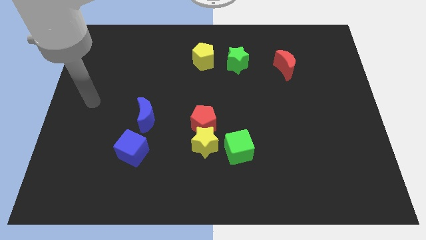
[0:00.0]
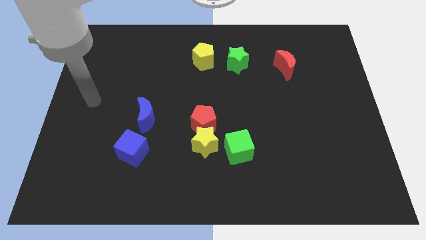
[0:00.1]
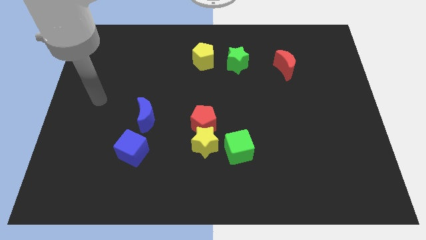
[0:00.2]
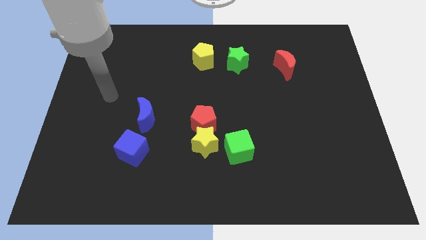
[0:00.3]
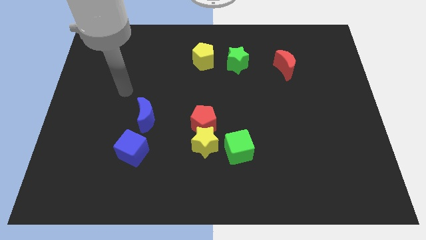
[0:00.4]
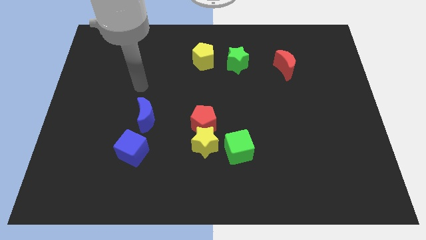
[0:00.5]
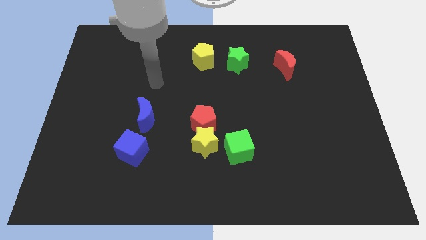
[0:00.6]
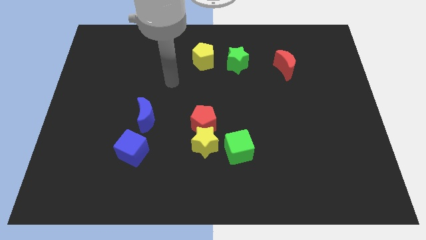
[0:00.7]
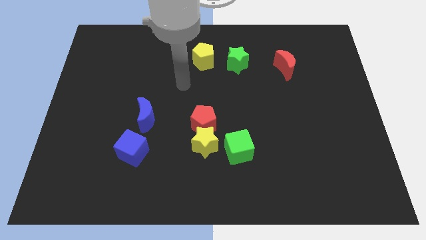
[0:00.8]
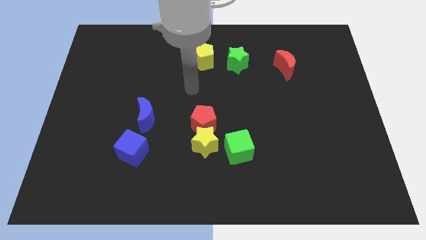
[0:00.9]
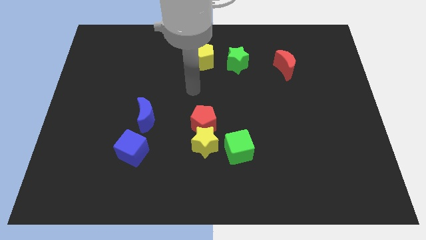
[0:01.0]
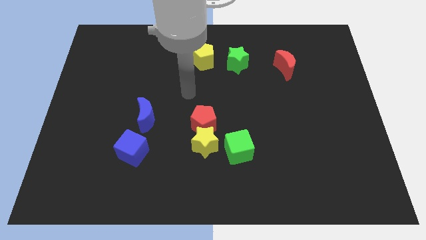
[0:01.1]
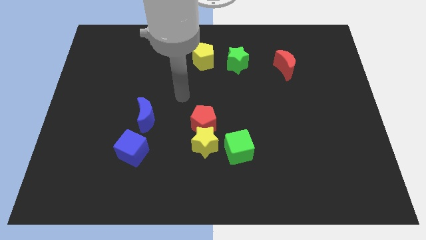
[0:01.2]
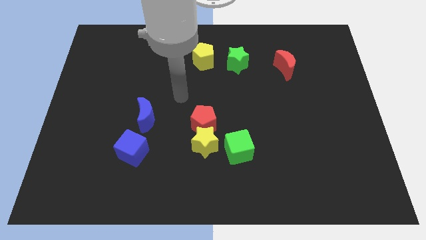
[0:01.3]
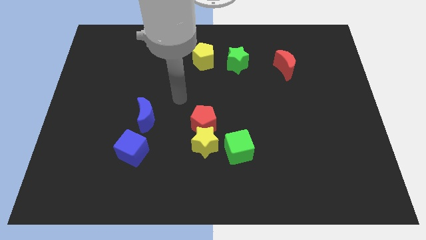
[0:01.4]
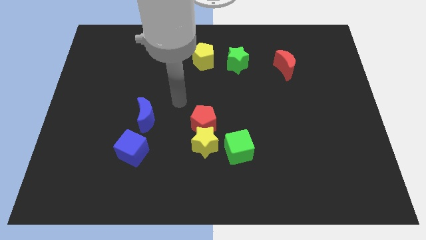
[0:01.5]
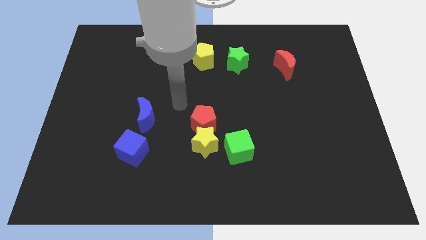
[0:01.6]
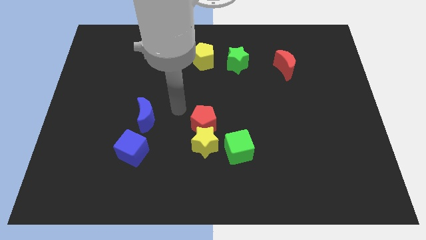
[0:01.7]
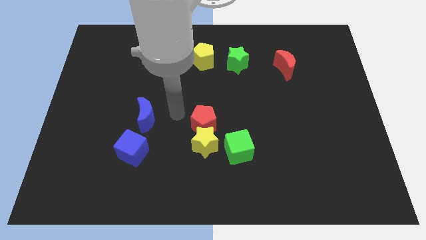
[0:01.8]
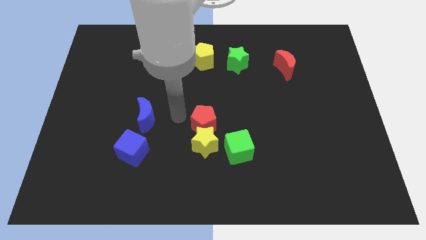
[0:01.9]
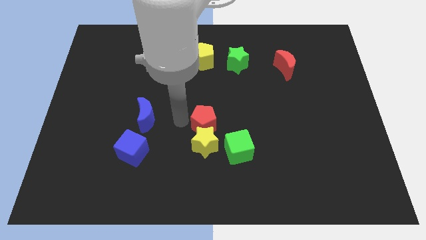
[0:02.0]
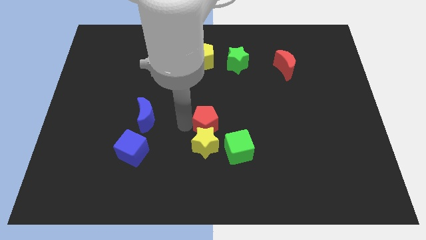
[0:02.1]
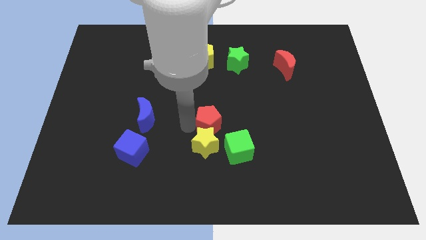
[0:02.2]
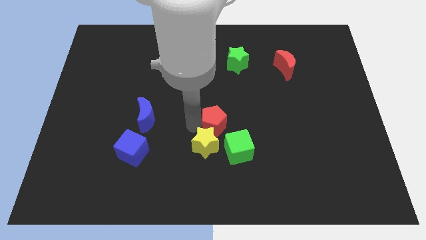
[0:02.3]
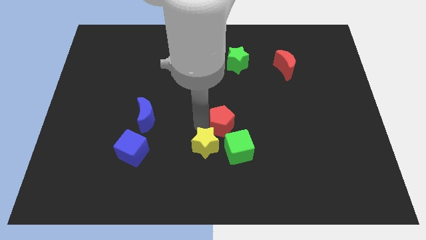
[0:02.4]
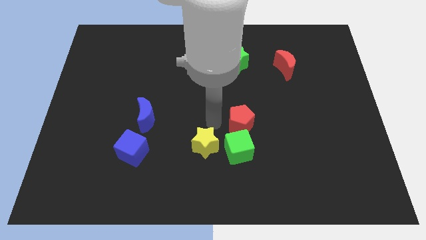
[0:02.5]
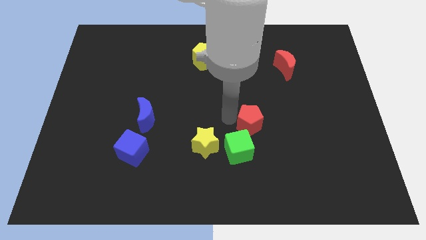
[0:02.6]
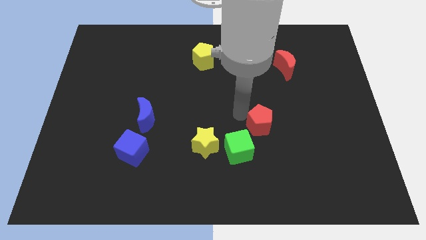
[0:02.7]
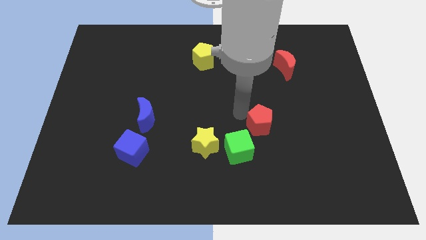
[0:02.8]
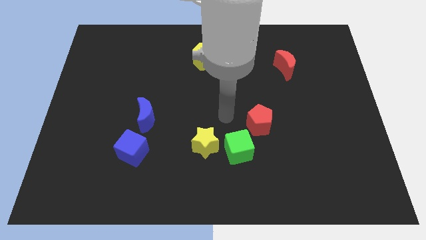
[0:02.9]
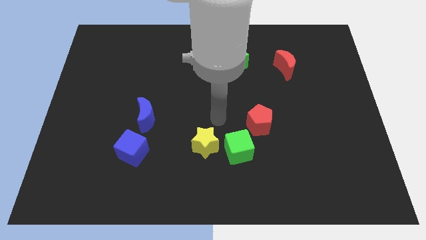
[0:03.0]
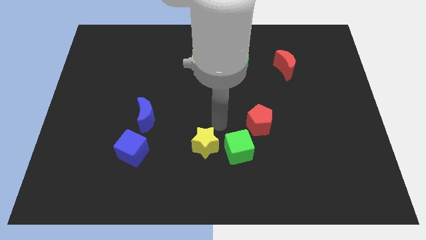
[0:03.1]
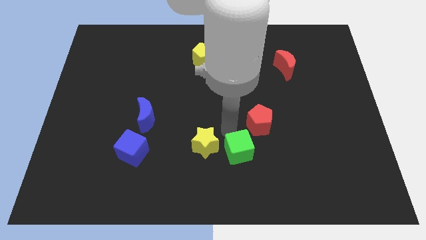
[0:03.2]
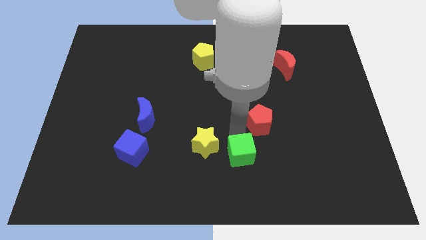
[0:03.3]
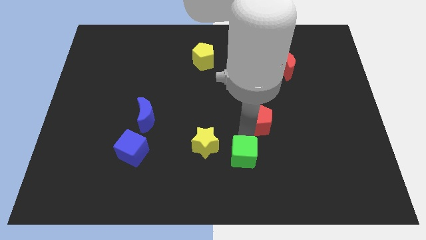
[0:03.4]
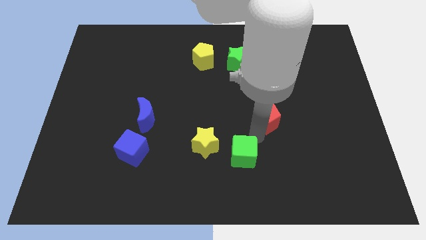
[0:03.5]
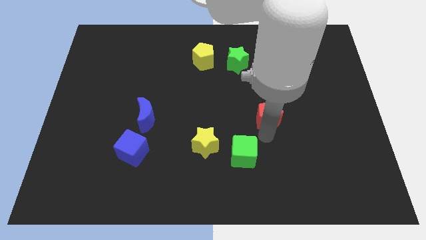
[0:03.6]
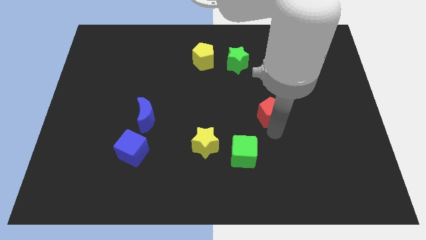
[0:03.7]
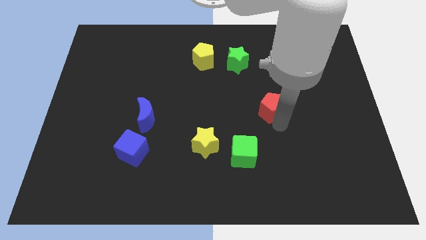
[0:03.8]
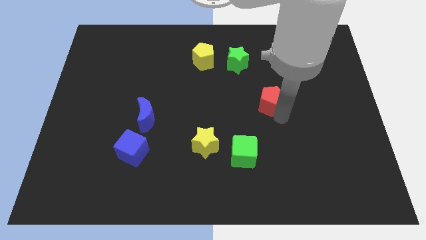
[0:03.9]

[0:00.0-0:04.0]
push the red pentagon parallel to blue crescent

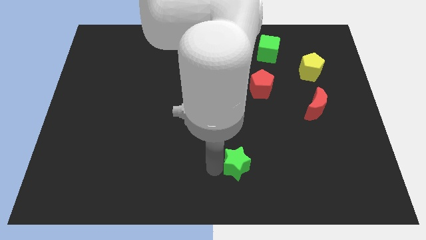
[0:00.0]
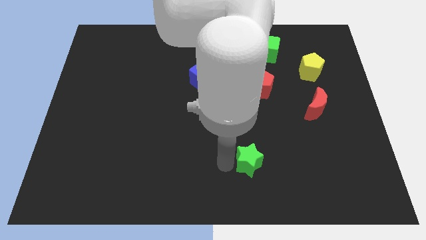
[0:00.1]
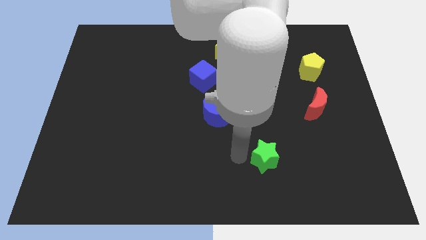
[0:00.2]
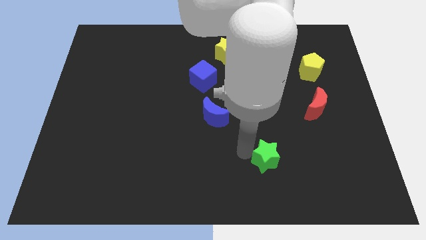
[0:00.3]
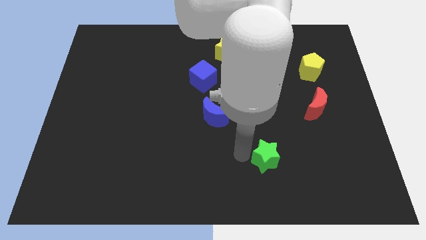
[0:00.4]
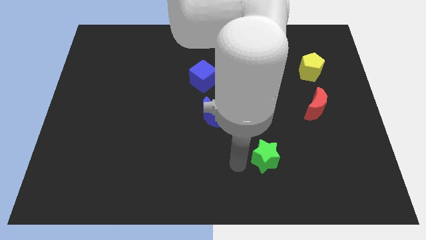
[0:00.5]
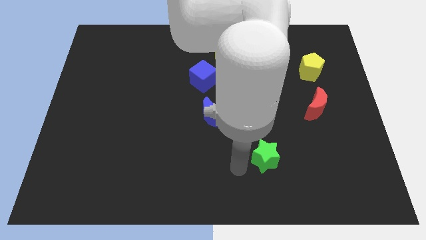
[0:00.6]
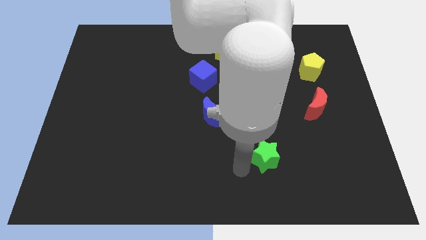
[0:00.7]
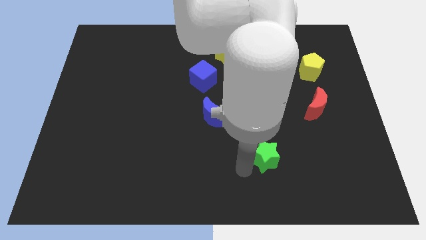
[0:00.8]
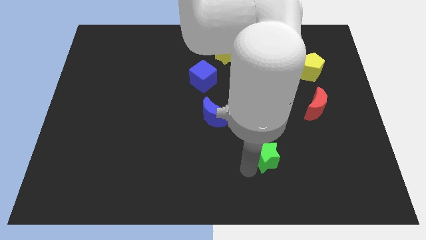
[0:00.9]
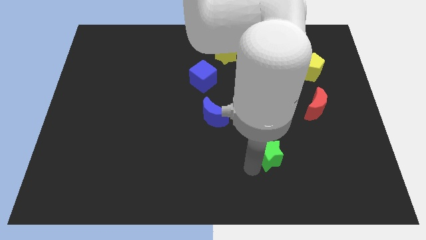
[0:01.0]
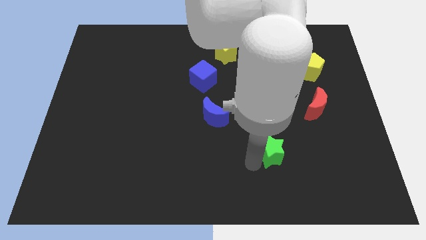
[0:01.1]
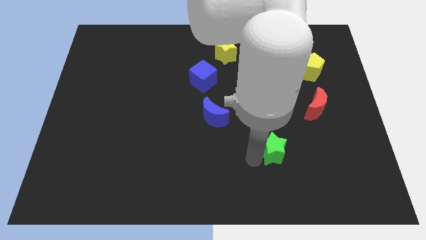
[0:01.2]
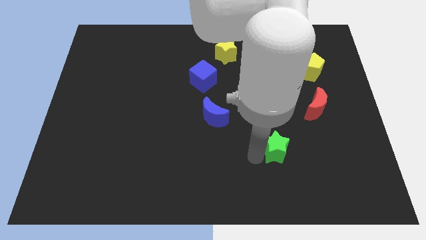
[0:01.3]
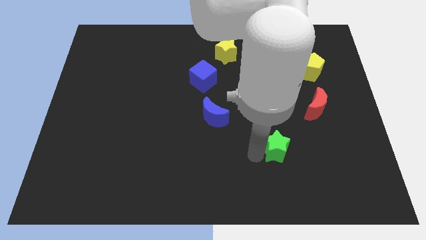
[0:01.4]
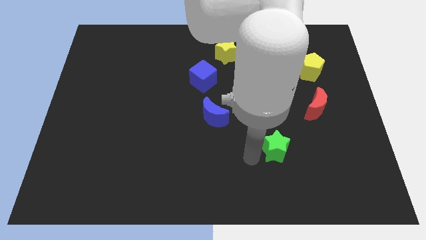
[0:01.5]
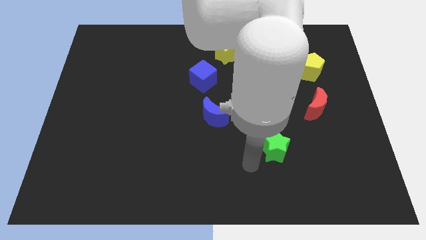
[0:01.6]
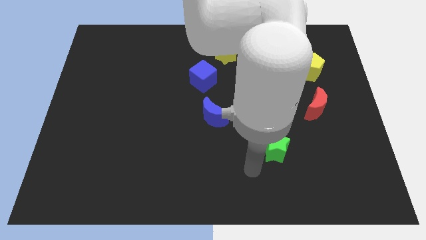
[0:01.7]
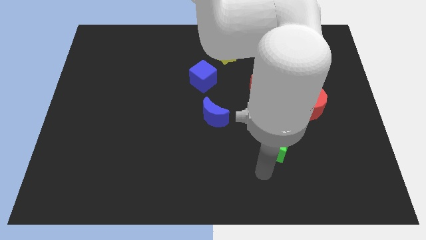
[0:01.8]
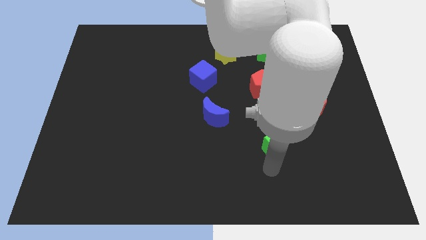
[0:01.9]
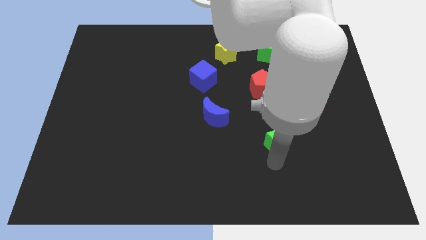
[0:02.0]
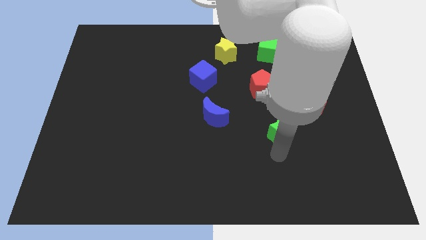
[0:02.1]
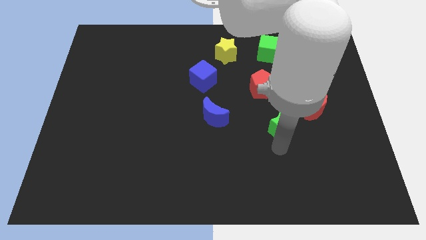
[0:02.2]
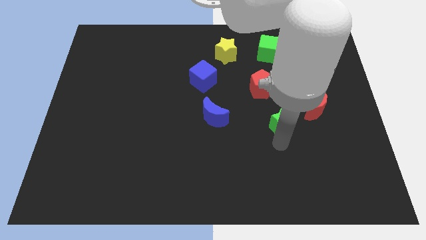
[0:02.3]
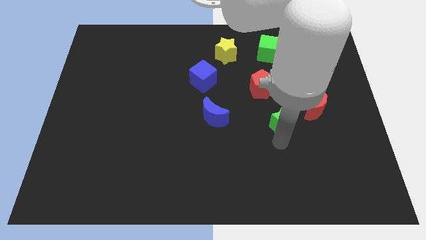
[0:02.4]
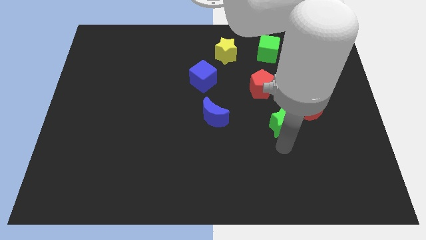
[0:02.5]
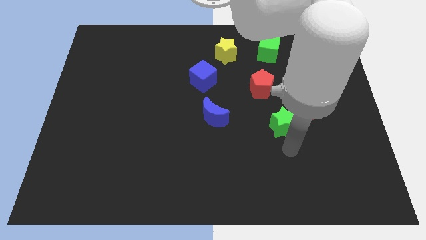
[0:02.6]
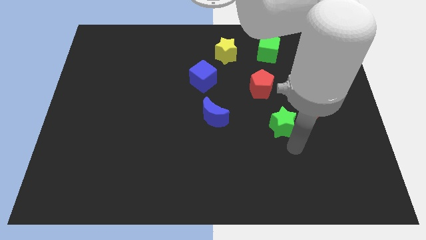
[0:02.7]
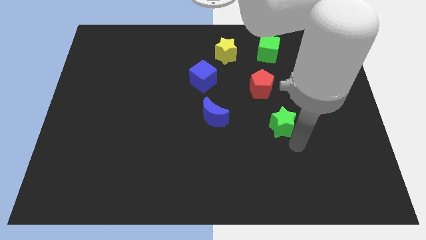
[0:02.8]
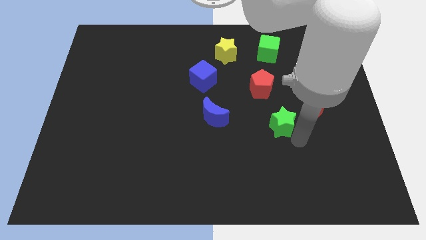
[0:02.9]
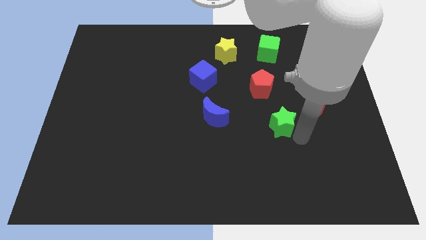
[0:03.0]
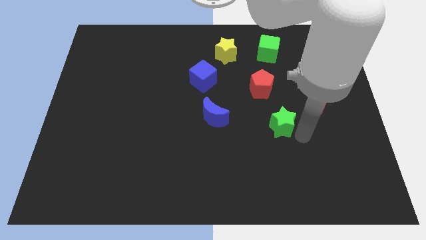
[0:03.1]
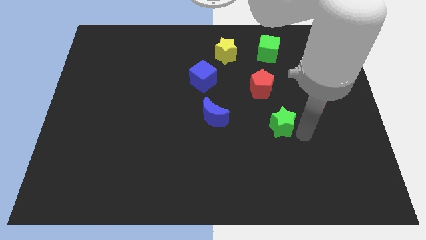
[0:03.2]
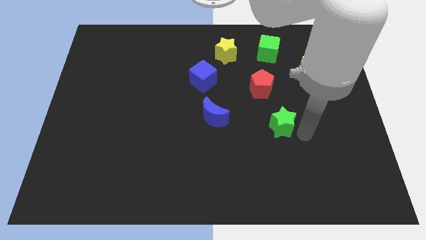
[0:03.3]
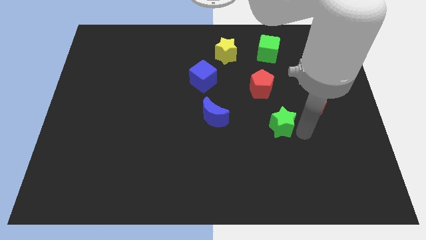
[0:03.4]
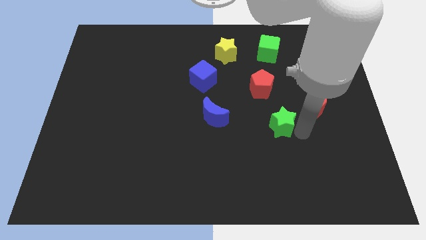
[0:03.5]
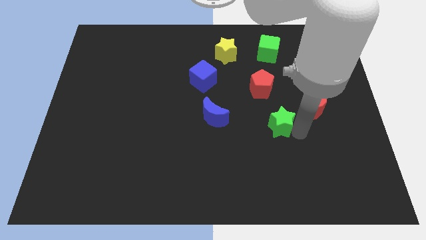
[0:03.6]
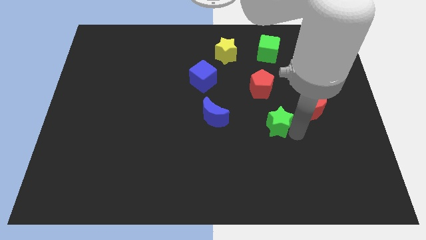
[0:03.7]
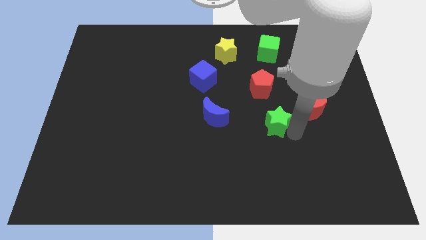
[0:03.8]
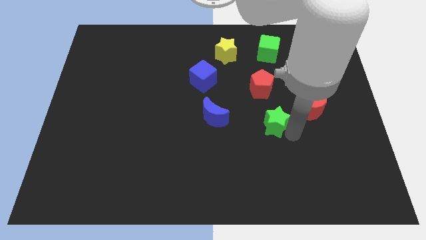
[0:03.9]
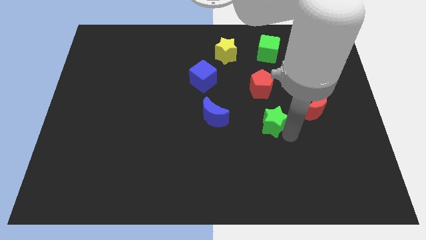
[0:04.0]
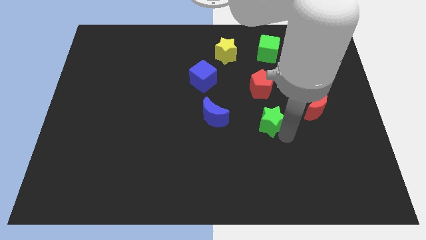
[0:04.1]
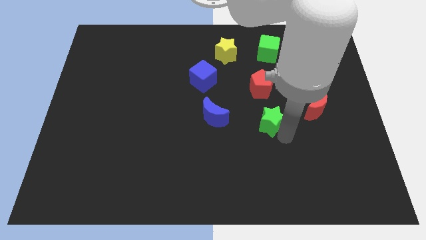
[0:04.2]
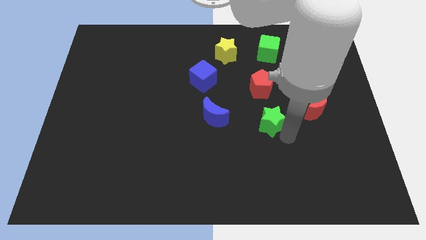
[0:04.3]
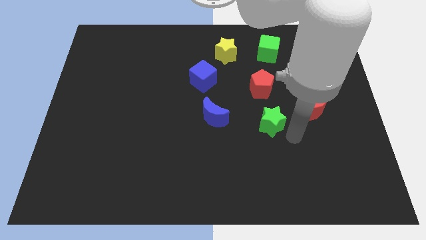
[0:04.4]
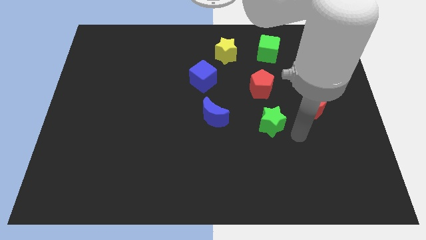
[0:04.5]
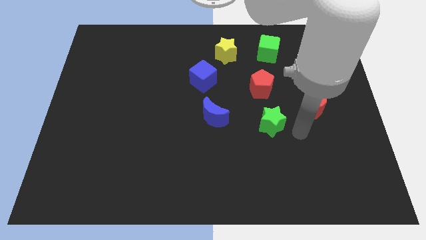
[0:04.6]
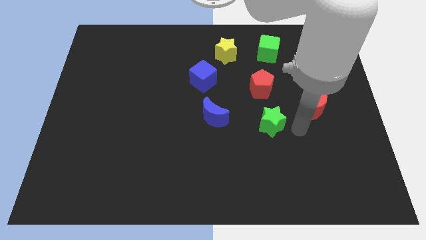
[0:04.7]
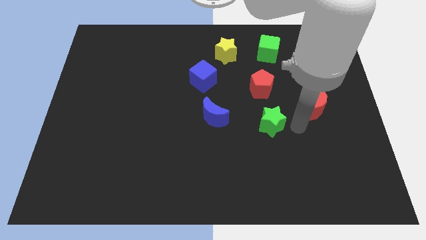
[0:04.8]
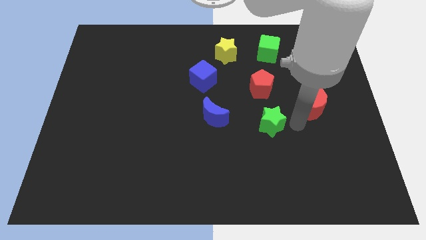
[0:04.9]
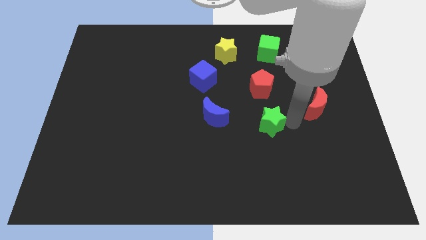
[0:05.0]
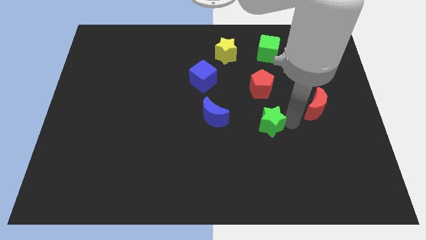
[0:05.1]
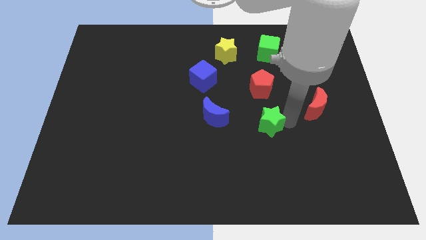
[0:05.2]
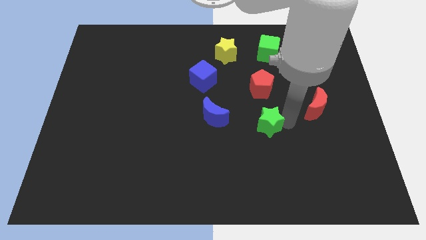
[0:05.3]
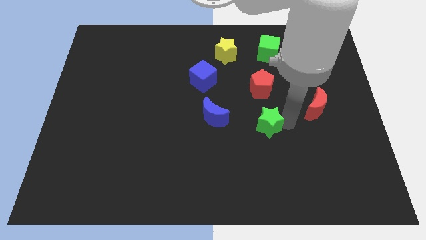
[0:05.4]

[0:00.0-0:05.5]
move the green star to the right of the blue crescent
